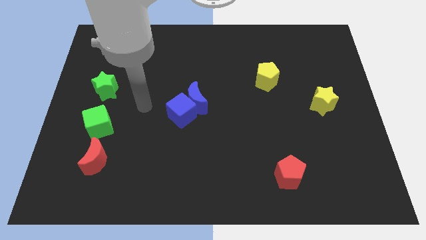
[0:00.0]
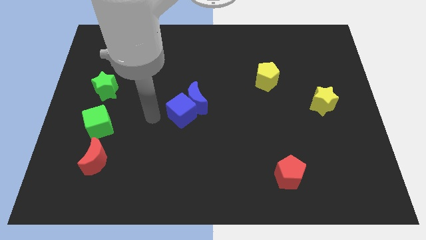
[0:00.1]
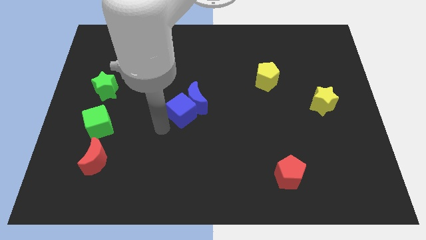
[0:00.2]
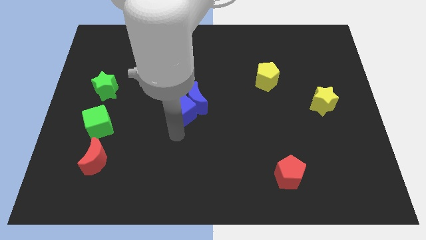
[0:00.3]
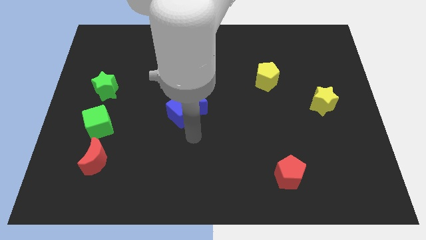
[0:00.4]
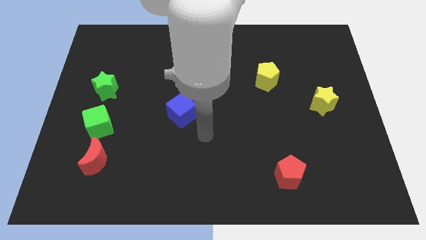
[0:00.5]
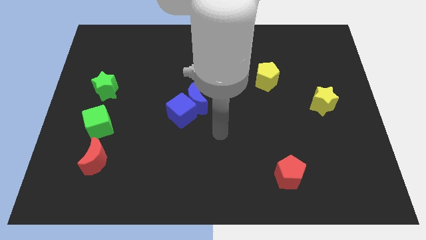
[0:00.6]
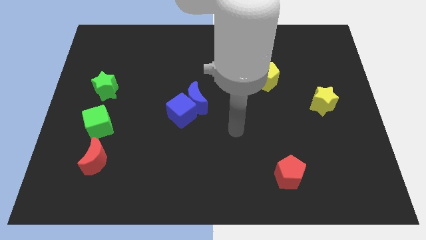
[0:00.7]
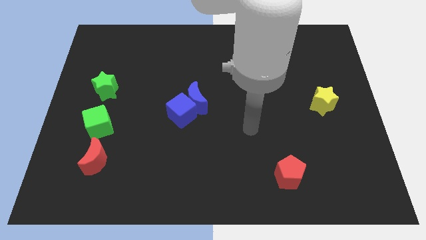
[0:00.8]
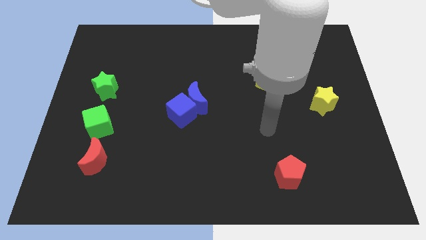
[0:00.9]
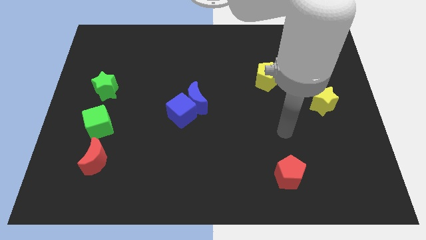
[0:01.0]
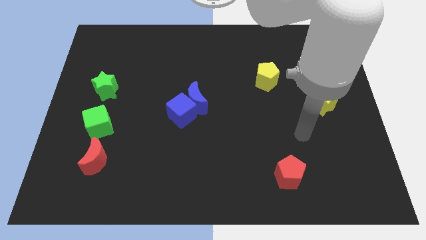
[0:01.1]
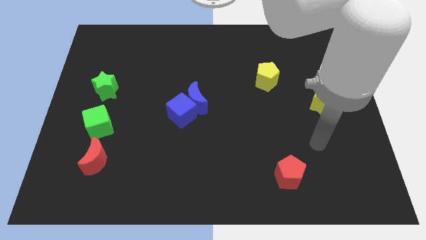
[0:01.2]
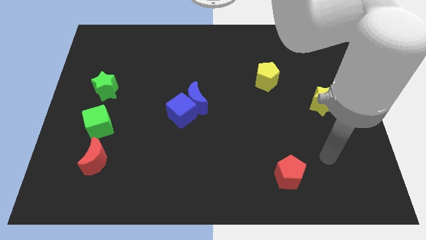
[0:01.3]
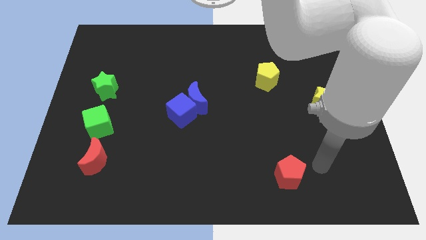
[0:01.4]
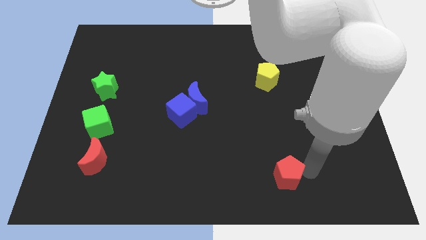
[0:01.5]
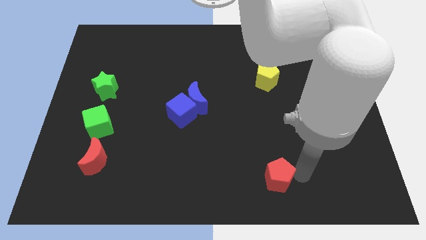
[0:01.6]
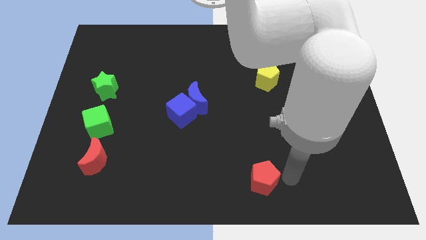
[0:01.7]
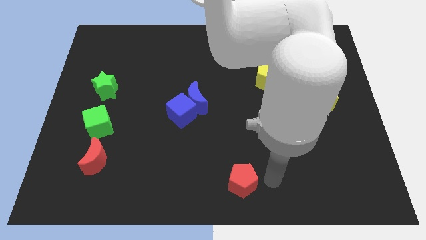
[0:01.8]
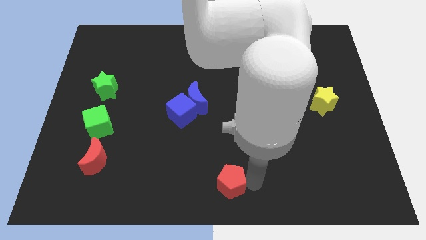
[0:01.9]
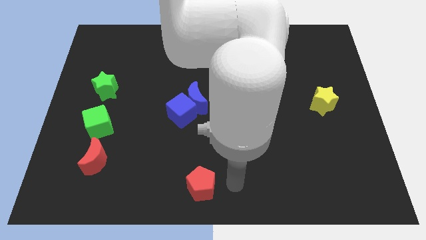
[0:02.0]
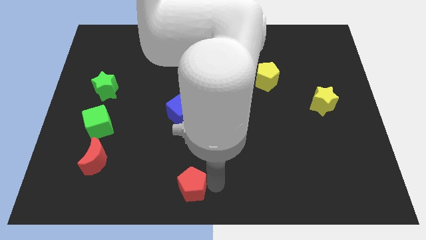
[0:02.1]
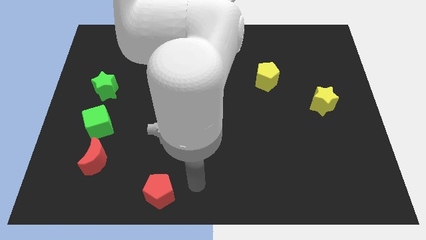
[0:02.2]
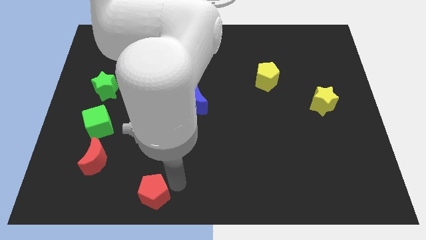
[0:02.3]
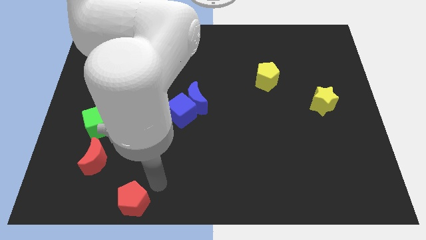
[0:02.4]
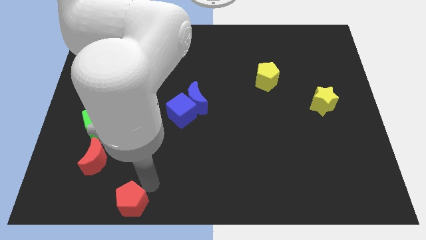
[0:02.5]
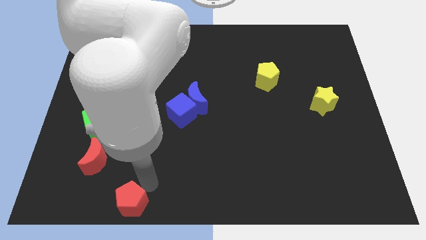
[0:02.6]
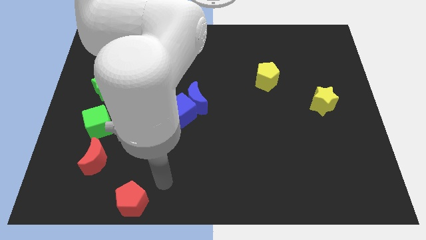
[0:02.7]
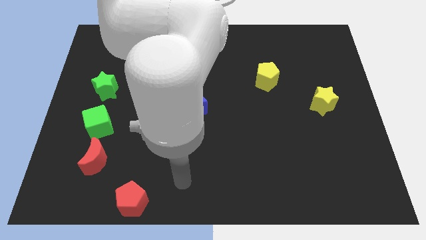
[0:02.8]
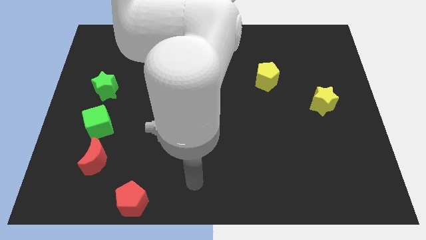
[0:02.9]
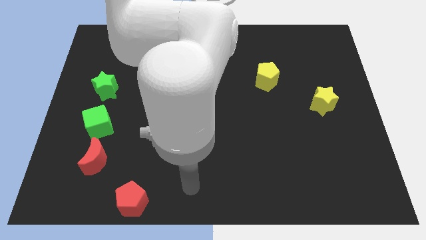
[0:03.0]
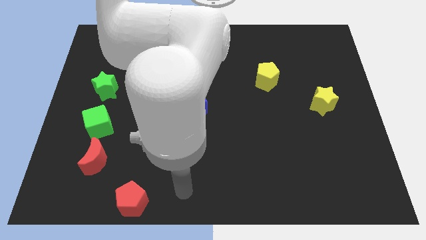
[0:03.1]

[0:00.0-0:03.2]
slide red pentagon to the right bottom of red moon

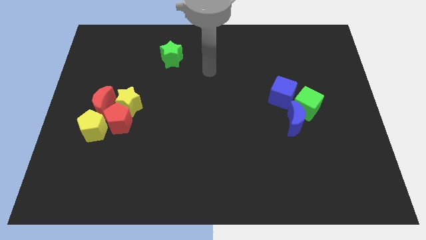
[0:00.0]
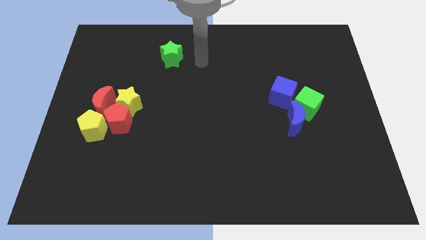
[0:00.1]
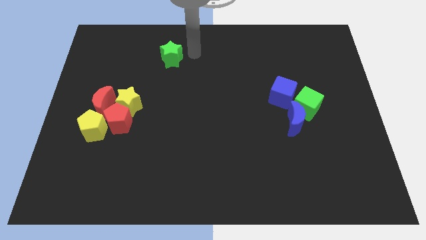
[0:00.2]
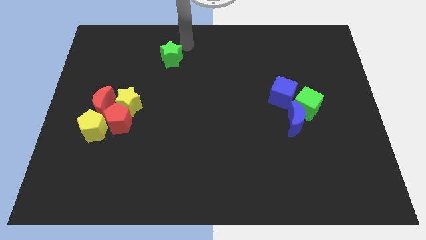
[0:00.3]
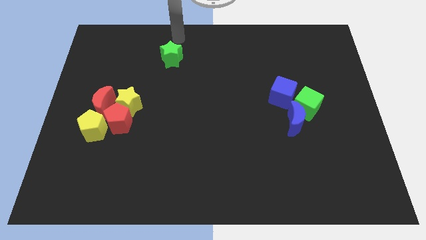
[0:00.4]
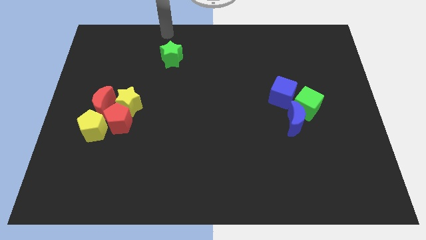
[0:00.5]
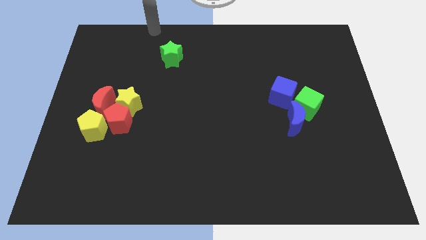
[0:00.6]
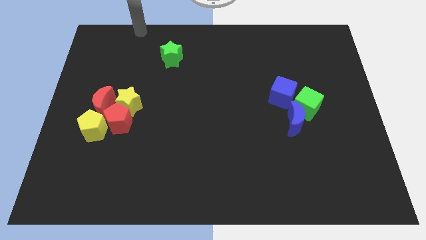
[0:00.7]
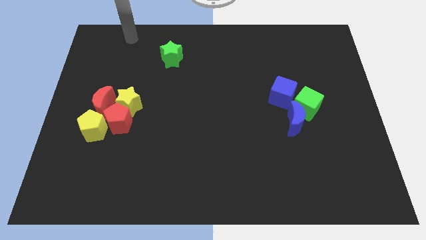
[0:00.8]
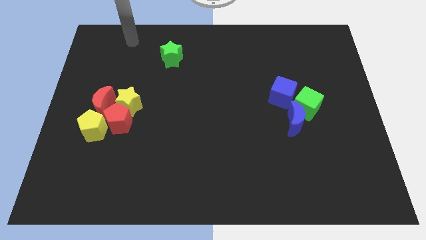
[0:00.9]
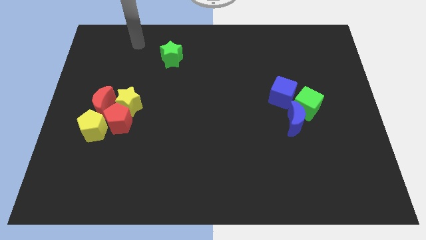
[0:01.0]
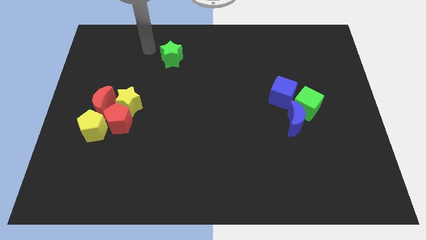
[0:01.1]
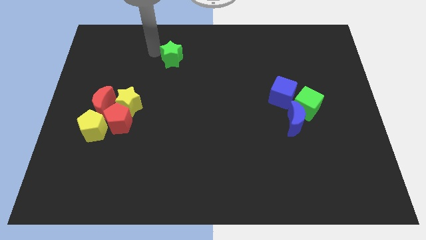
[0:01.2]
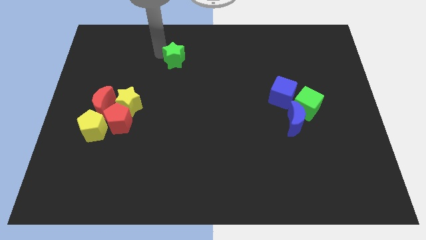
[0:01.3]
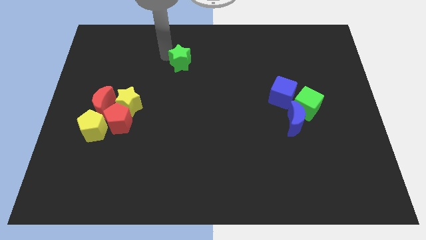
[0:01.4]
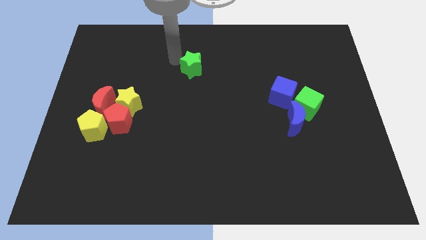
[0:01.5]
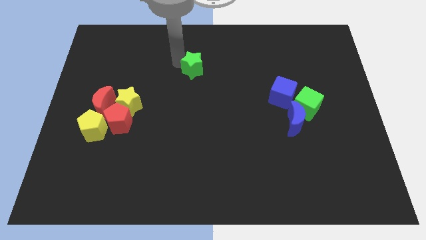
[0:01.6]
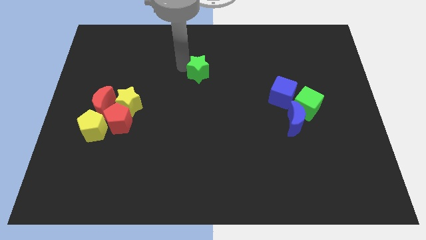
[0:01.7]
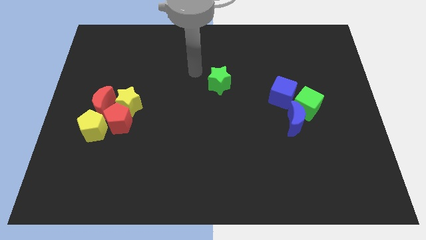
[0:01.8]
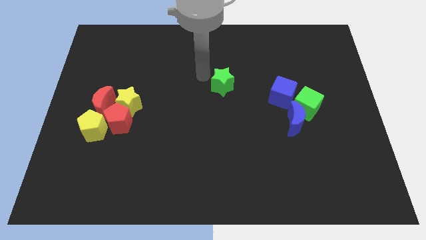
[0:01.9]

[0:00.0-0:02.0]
move the green star towards center

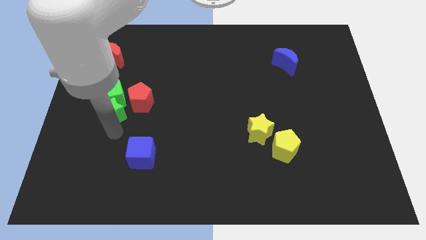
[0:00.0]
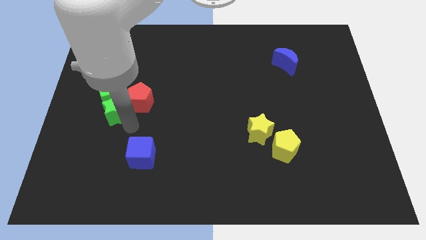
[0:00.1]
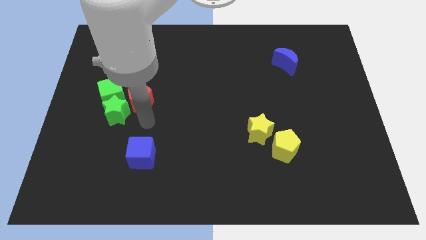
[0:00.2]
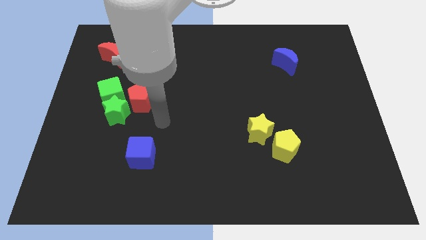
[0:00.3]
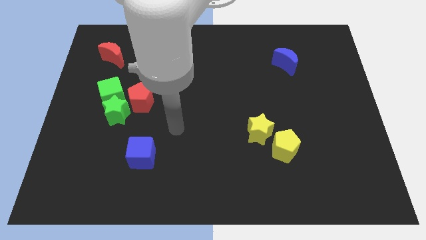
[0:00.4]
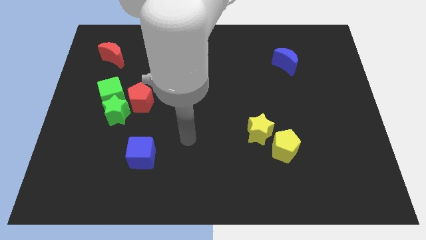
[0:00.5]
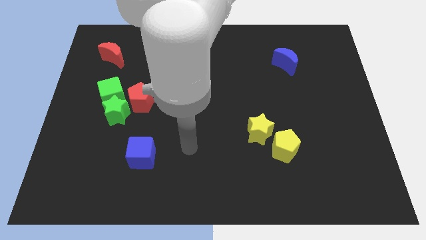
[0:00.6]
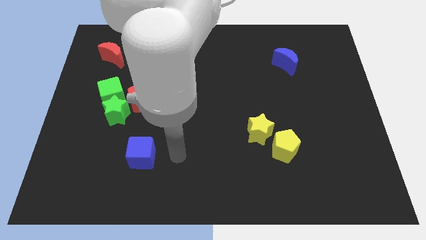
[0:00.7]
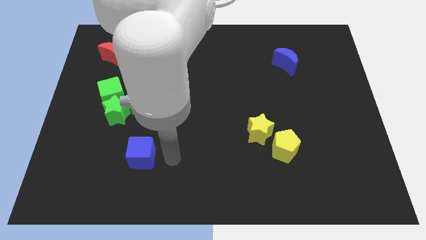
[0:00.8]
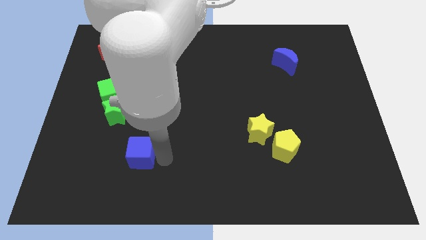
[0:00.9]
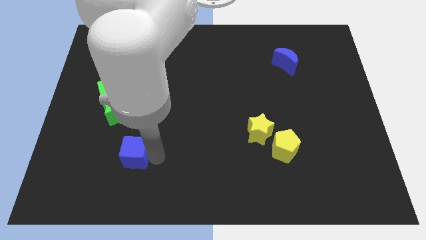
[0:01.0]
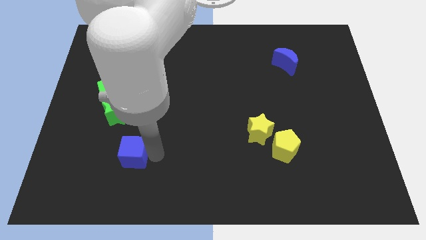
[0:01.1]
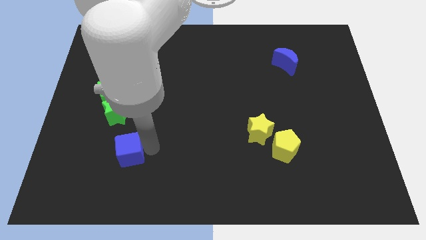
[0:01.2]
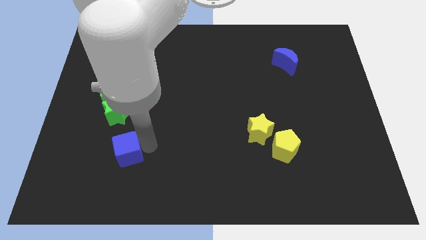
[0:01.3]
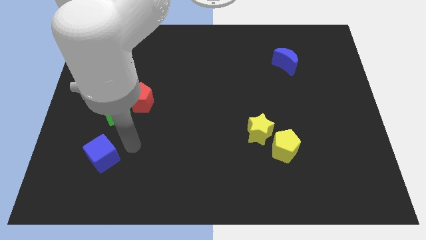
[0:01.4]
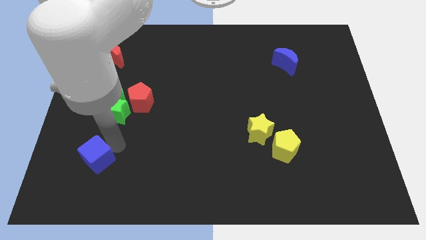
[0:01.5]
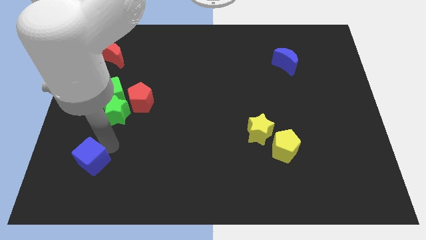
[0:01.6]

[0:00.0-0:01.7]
put the blue cube diagonally bottom left to the red pentagon

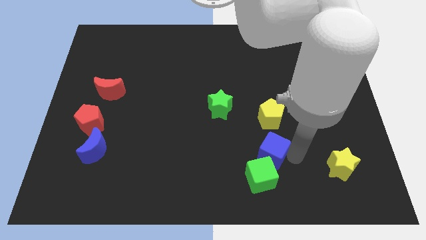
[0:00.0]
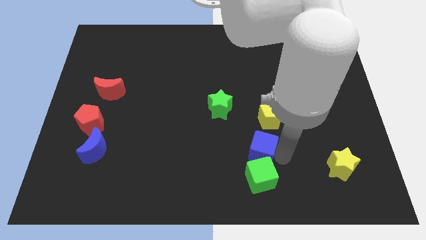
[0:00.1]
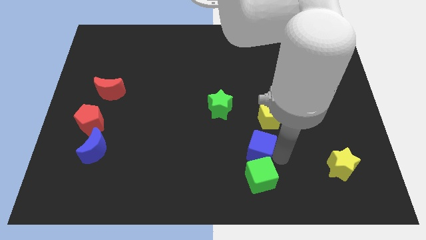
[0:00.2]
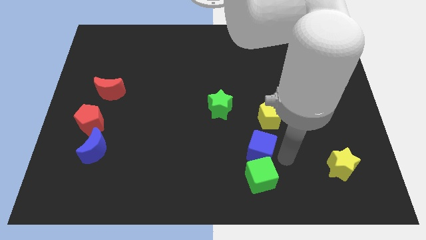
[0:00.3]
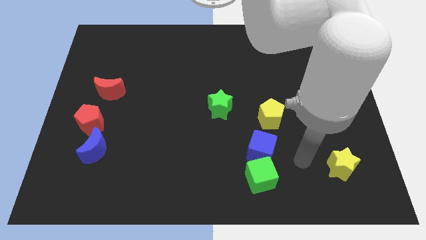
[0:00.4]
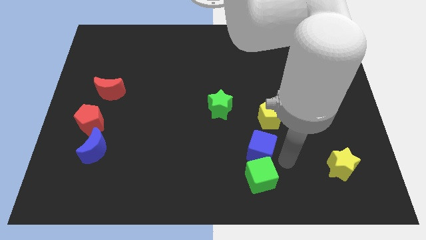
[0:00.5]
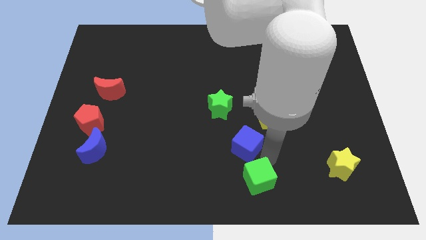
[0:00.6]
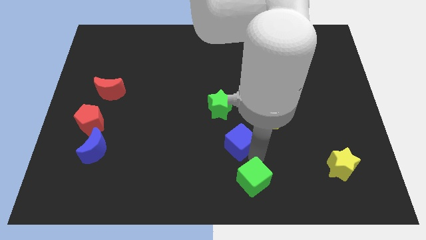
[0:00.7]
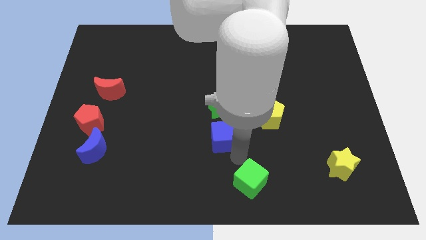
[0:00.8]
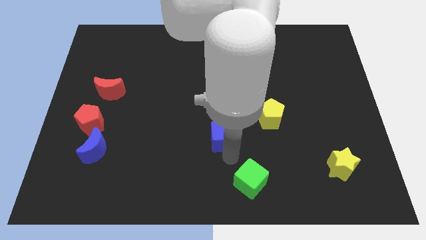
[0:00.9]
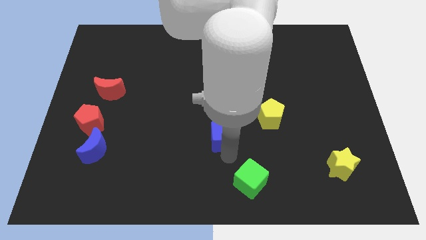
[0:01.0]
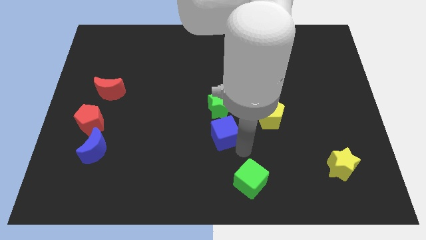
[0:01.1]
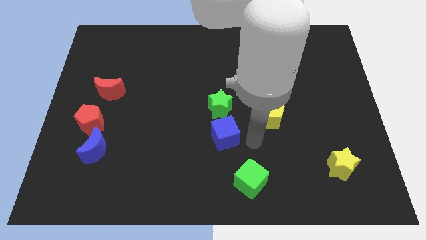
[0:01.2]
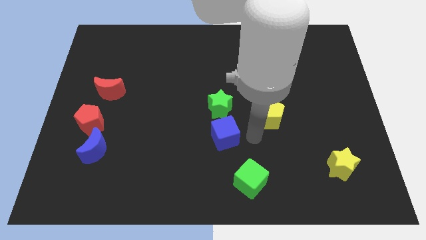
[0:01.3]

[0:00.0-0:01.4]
place the blue cube below the green star

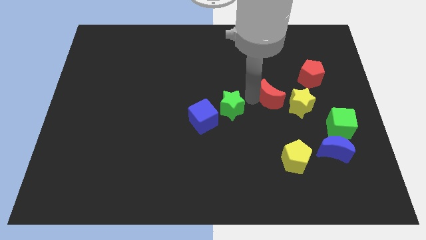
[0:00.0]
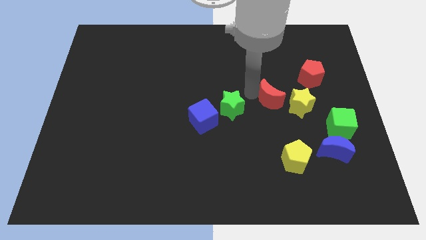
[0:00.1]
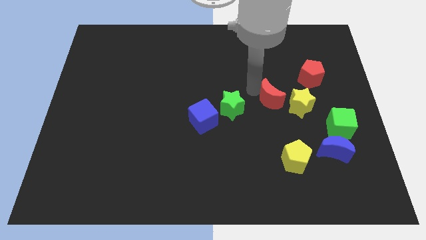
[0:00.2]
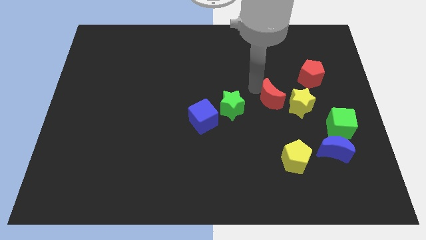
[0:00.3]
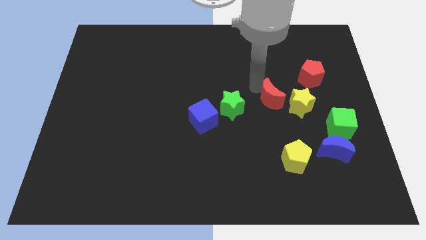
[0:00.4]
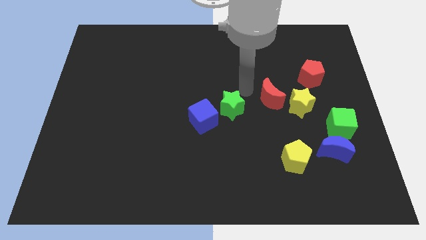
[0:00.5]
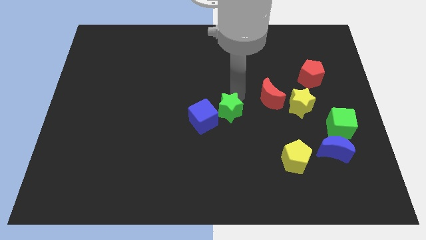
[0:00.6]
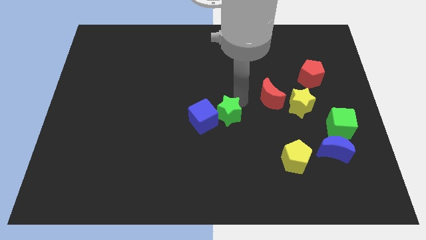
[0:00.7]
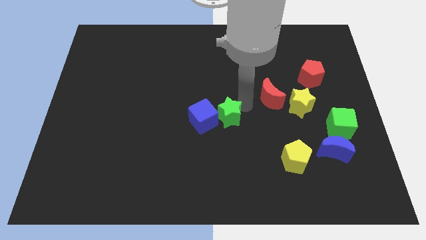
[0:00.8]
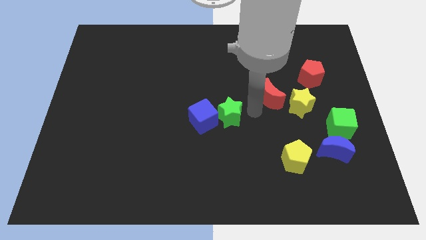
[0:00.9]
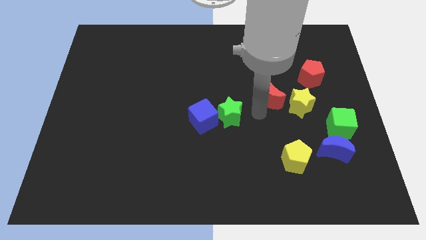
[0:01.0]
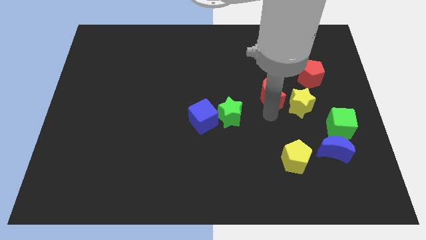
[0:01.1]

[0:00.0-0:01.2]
slightly push the green star into the blue cube
